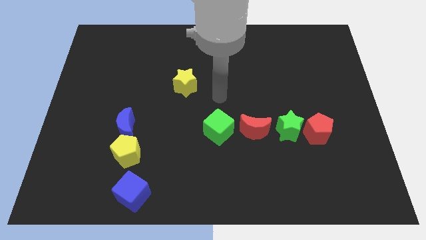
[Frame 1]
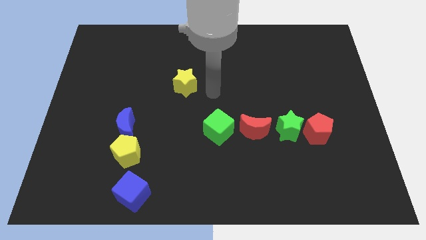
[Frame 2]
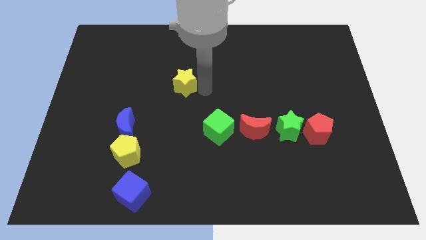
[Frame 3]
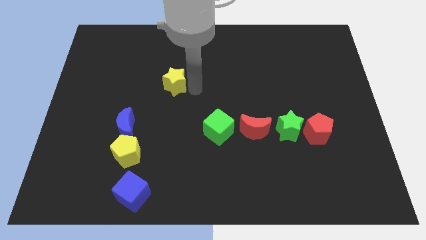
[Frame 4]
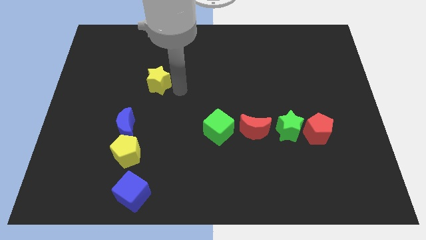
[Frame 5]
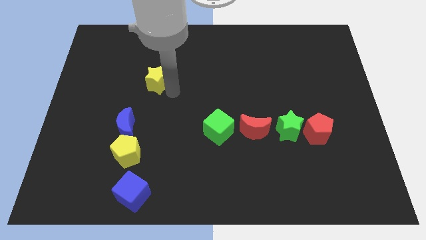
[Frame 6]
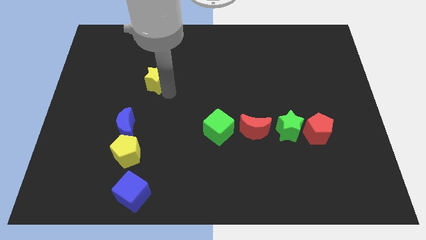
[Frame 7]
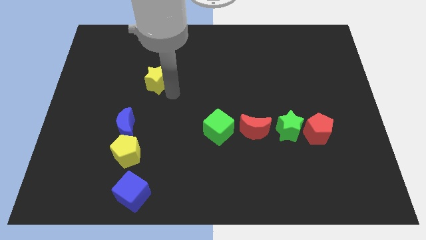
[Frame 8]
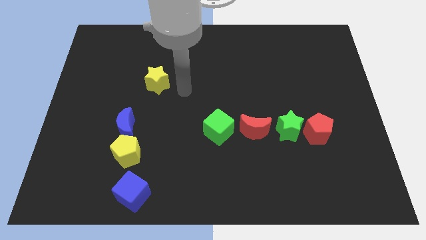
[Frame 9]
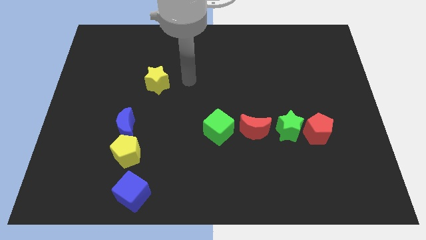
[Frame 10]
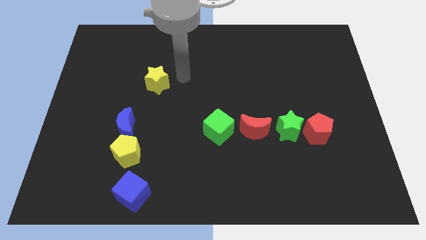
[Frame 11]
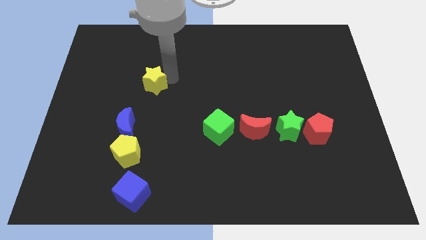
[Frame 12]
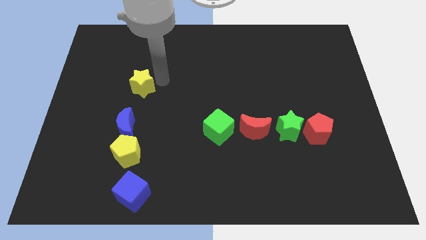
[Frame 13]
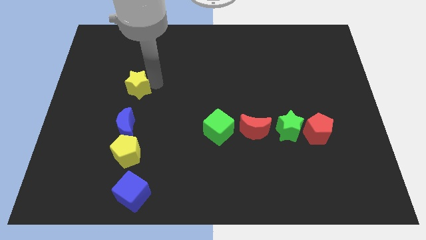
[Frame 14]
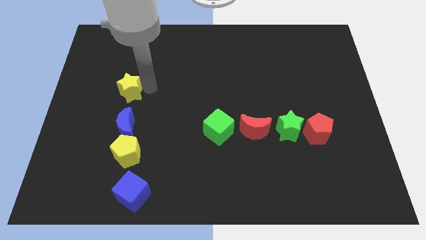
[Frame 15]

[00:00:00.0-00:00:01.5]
place the yellow star above the blue moon

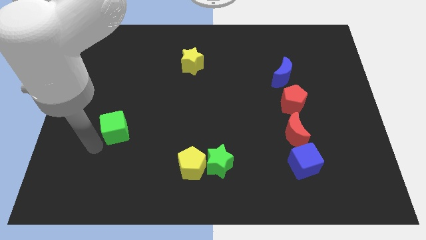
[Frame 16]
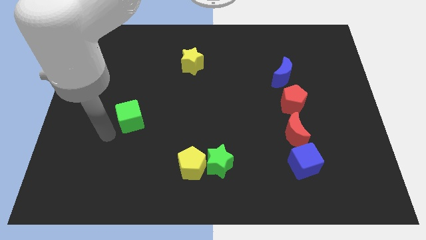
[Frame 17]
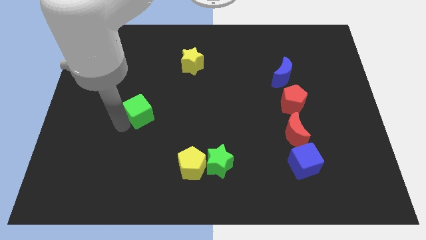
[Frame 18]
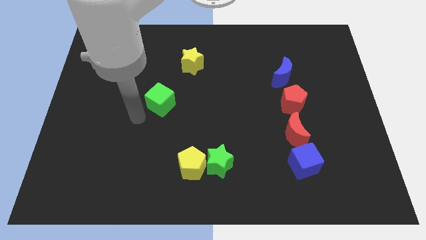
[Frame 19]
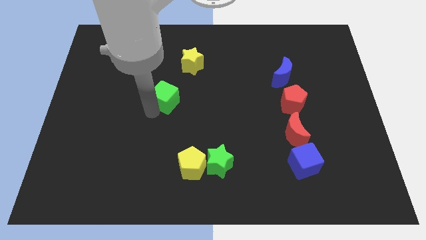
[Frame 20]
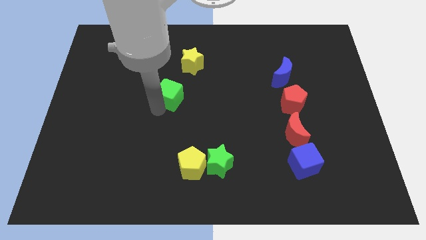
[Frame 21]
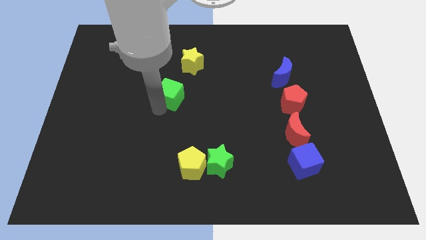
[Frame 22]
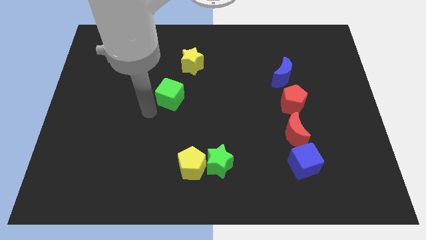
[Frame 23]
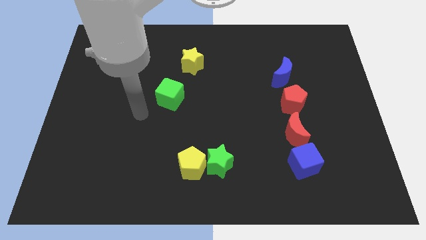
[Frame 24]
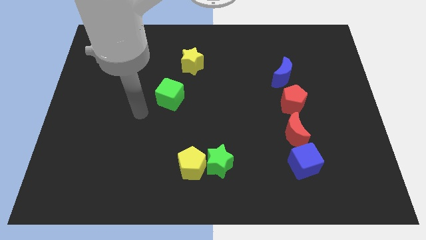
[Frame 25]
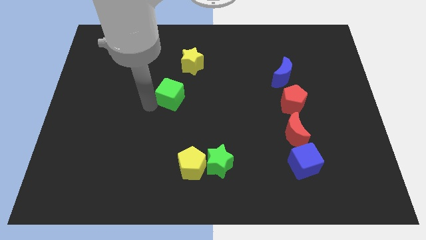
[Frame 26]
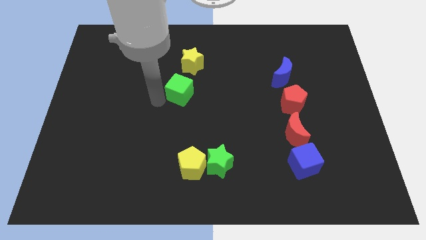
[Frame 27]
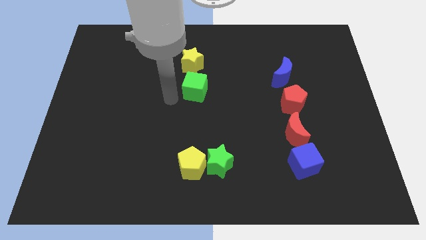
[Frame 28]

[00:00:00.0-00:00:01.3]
slide the green cube to the bottom side of the yellow star

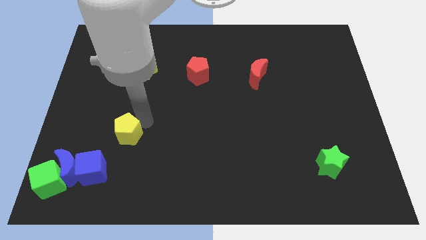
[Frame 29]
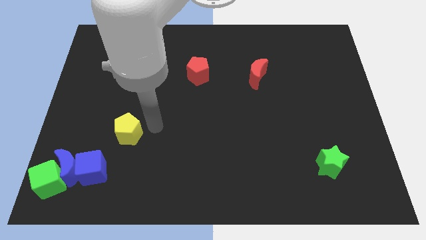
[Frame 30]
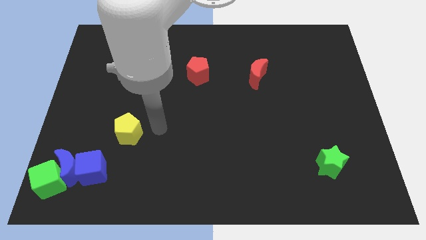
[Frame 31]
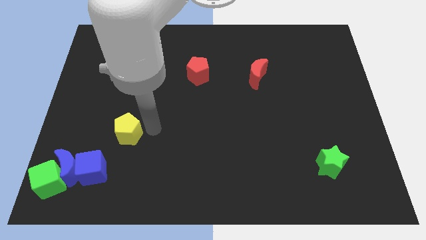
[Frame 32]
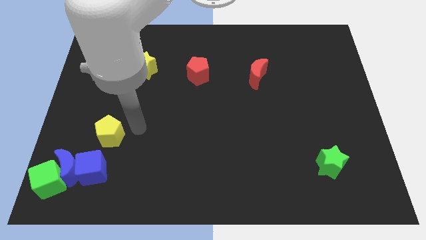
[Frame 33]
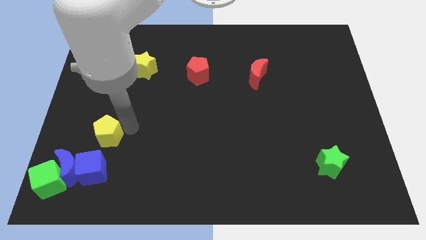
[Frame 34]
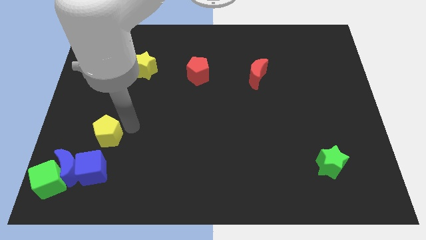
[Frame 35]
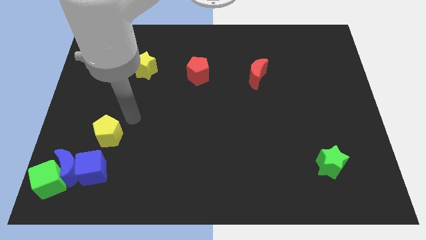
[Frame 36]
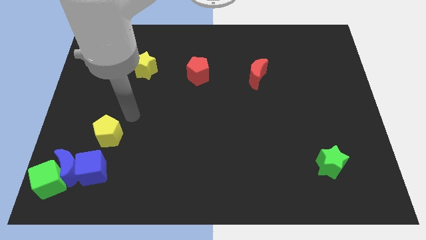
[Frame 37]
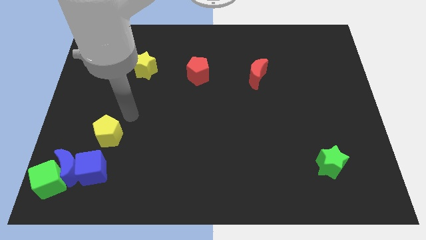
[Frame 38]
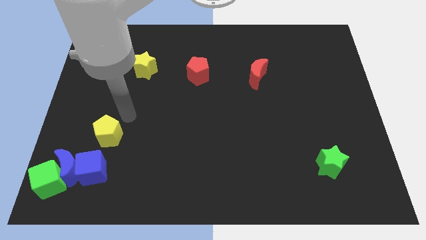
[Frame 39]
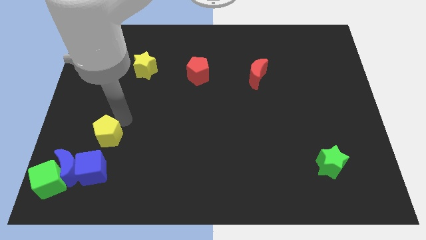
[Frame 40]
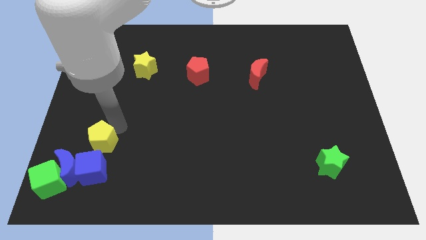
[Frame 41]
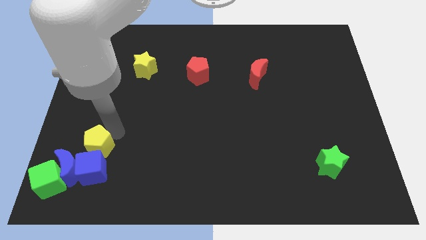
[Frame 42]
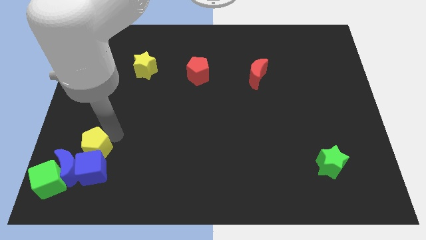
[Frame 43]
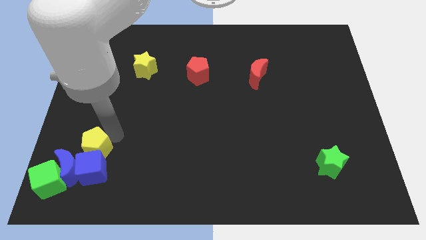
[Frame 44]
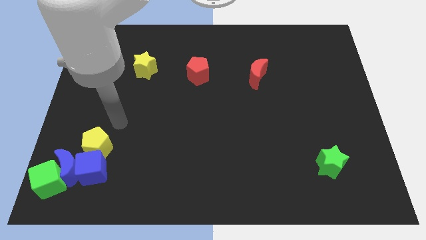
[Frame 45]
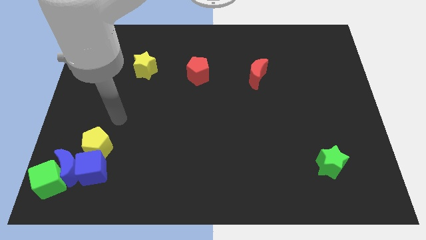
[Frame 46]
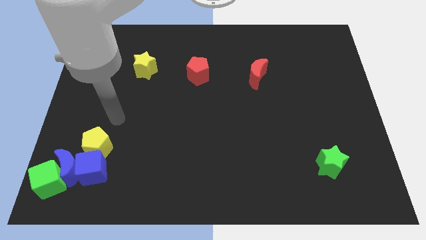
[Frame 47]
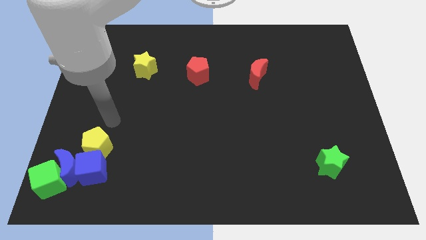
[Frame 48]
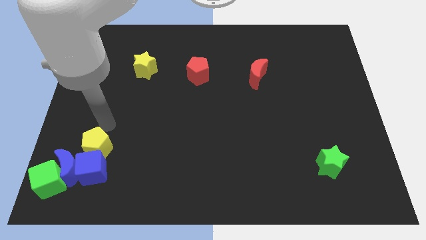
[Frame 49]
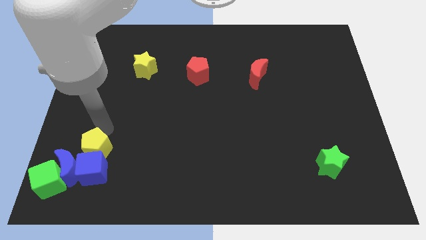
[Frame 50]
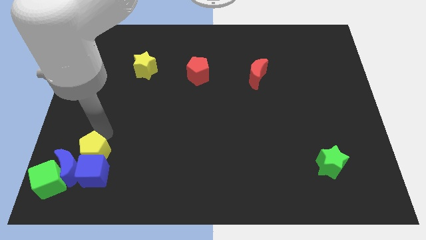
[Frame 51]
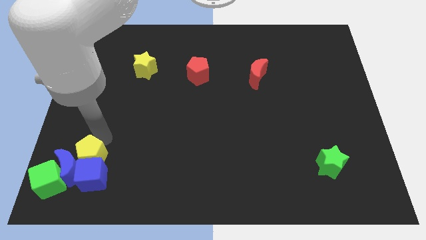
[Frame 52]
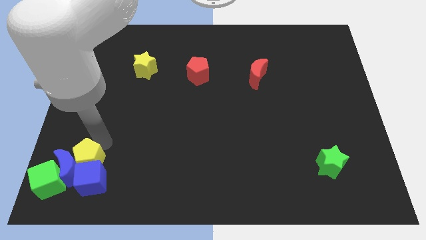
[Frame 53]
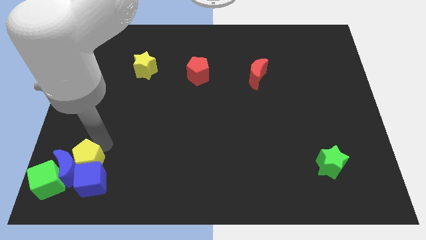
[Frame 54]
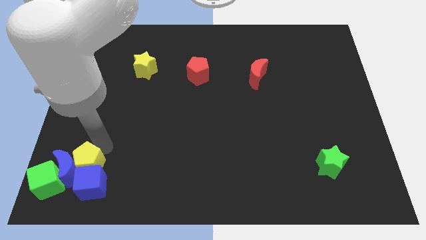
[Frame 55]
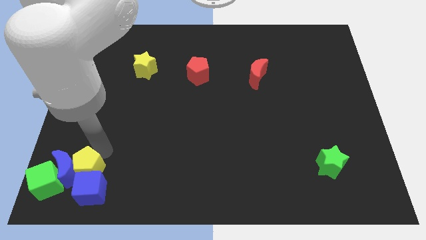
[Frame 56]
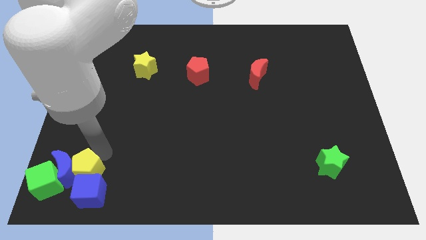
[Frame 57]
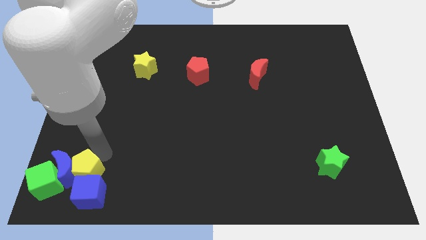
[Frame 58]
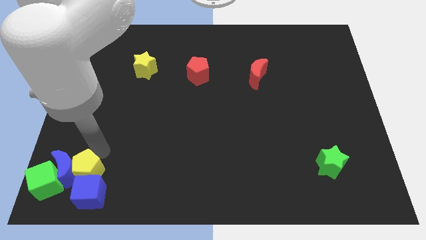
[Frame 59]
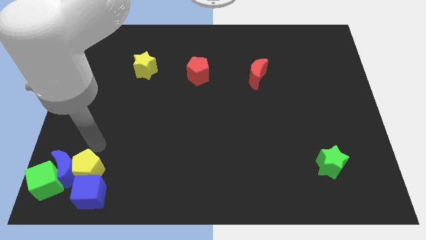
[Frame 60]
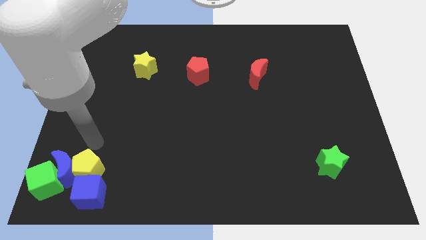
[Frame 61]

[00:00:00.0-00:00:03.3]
push the yellow pentagon into the blue cube

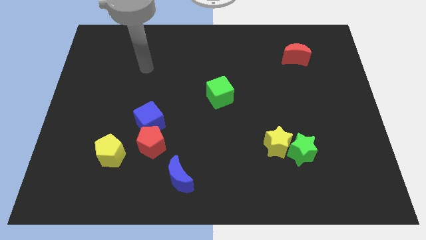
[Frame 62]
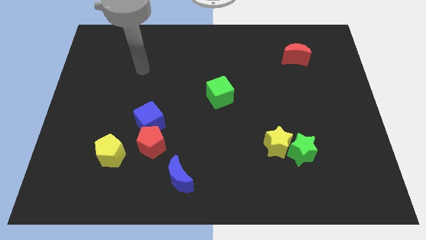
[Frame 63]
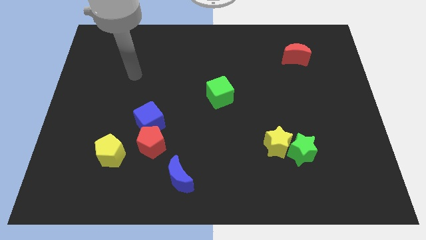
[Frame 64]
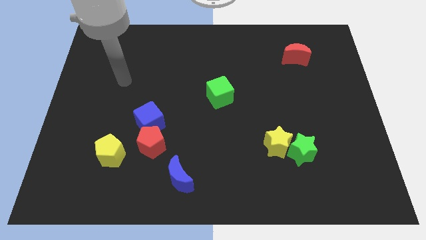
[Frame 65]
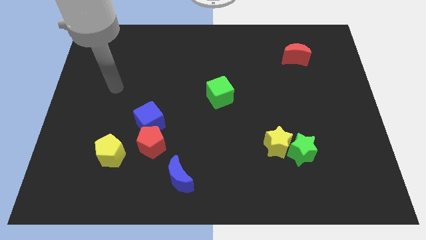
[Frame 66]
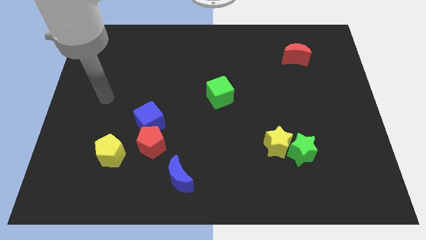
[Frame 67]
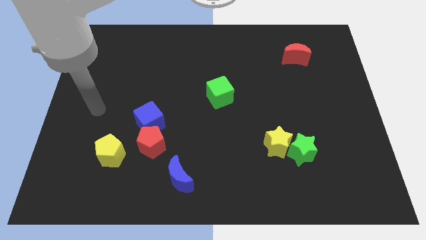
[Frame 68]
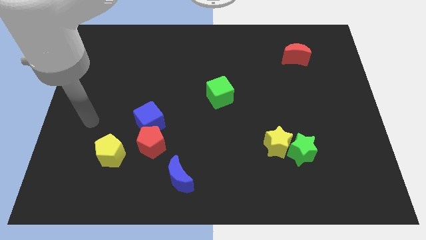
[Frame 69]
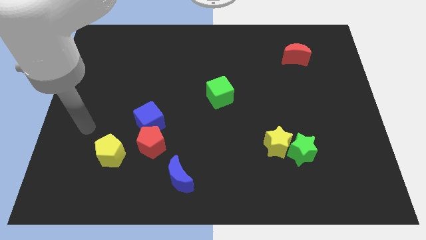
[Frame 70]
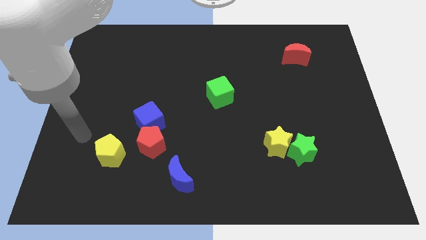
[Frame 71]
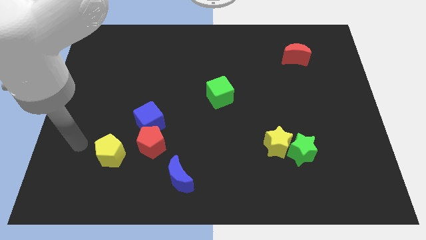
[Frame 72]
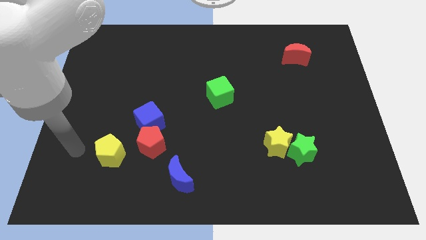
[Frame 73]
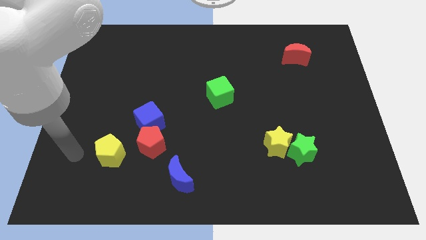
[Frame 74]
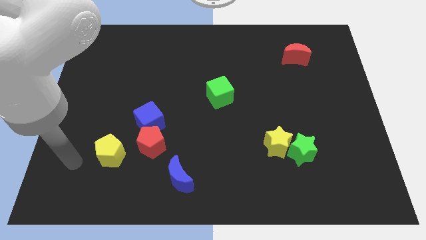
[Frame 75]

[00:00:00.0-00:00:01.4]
point your arm at the left side of the yellow pentagon

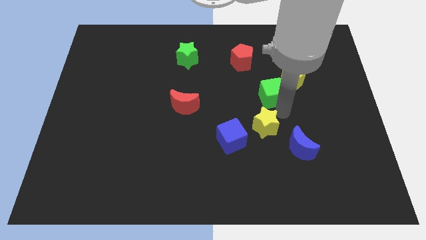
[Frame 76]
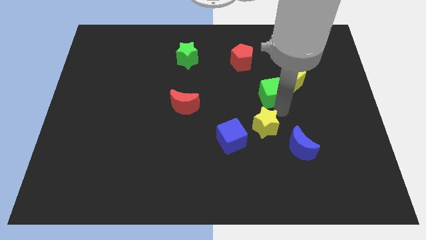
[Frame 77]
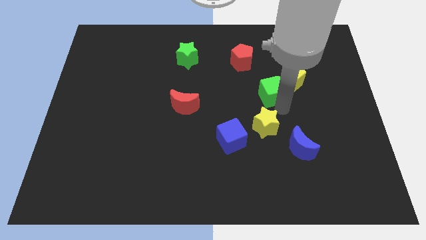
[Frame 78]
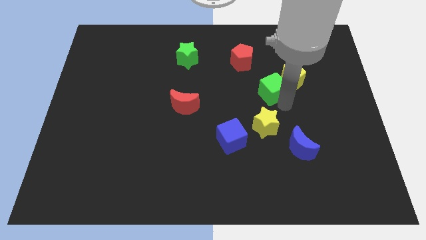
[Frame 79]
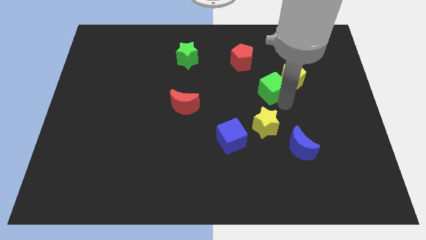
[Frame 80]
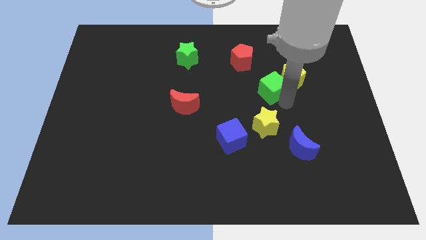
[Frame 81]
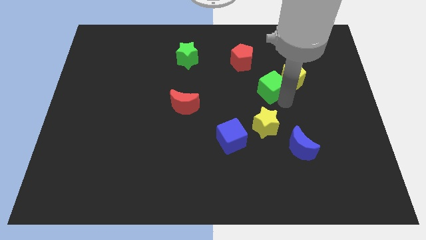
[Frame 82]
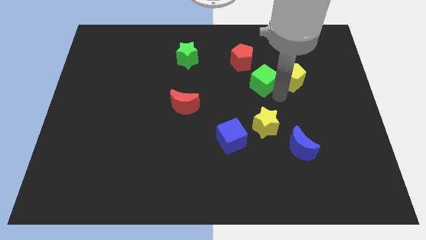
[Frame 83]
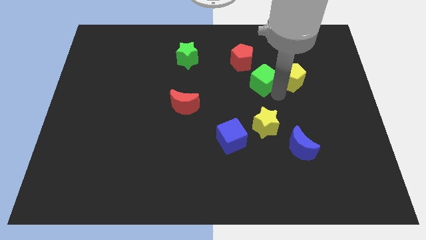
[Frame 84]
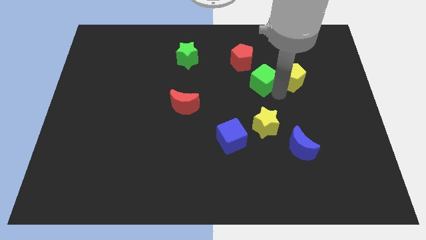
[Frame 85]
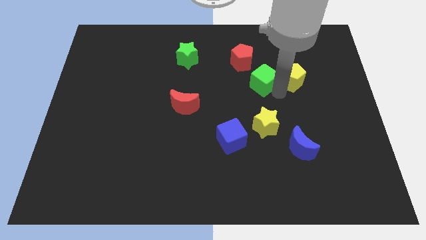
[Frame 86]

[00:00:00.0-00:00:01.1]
put the green cube to the left side of the yellow pentagon

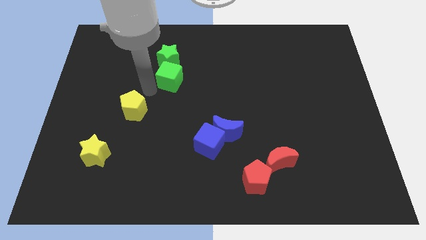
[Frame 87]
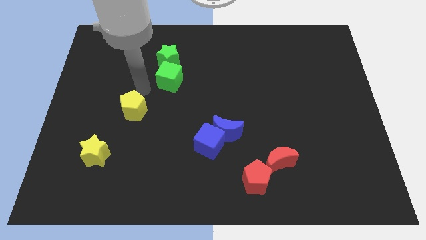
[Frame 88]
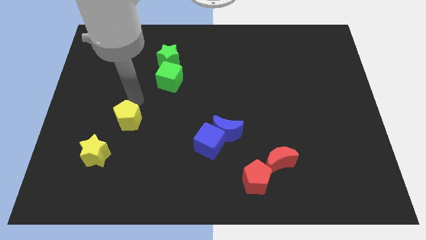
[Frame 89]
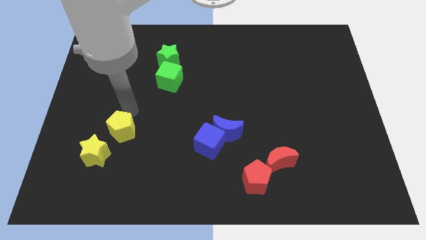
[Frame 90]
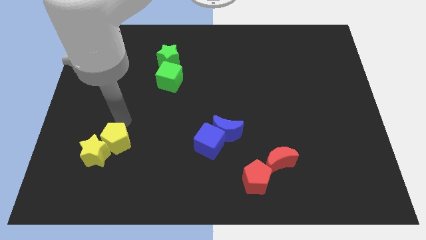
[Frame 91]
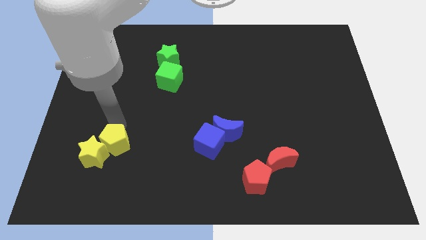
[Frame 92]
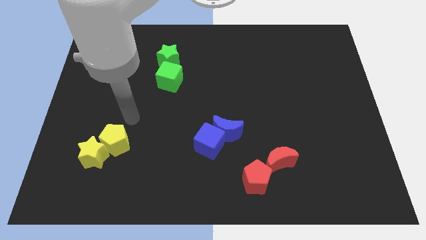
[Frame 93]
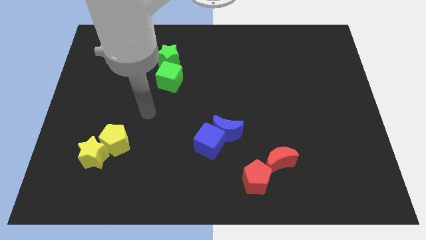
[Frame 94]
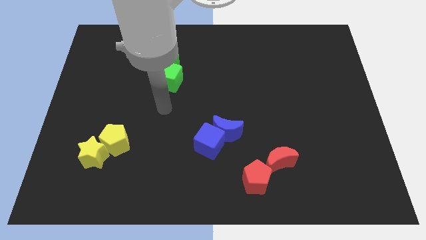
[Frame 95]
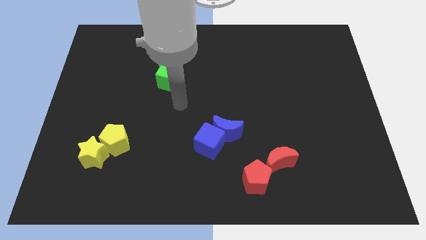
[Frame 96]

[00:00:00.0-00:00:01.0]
move yellow pentagon right above the yellow star
